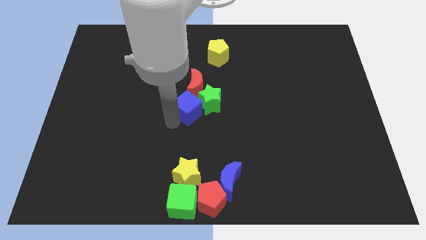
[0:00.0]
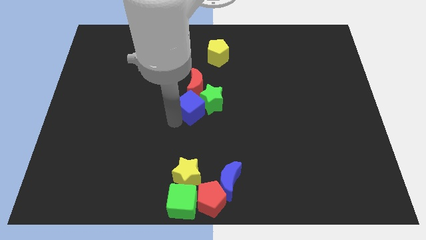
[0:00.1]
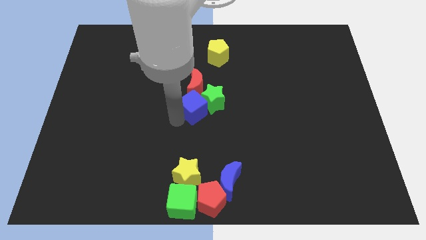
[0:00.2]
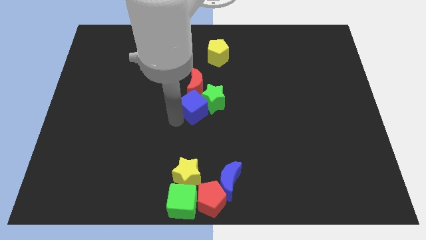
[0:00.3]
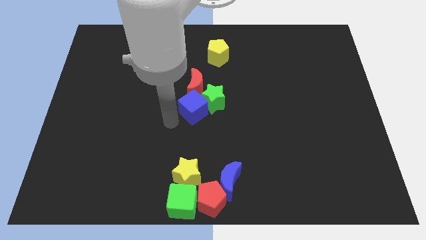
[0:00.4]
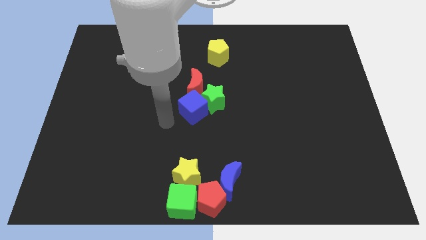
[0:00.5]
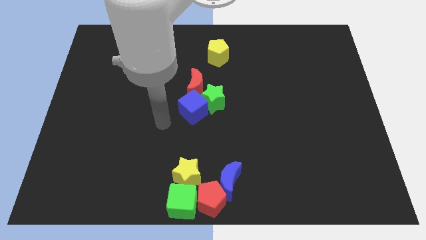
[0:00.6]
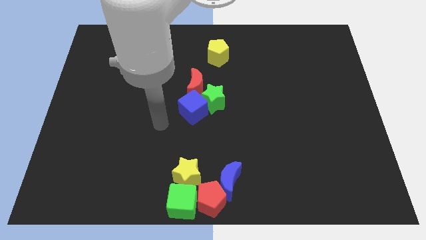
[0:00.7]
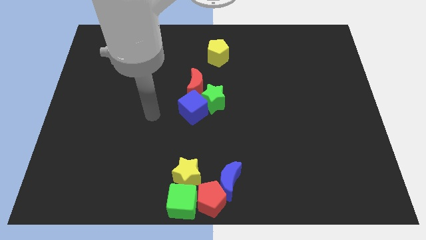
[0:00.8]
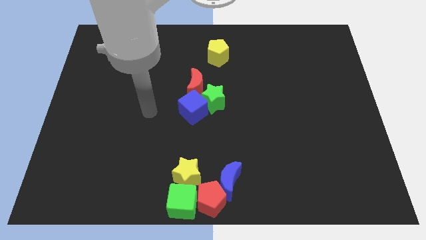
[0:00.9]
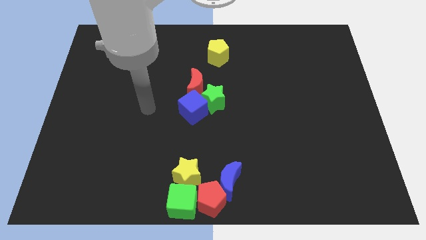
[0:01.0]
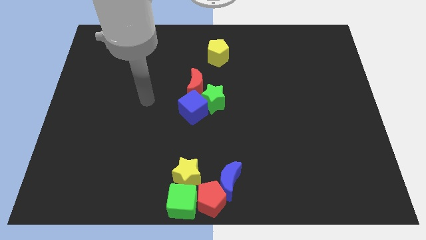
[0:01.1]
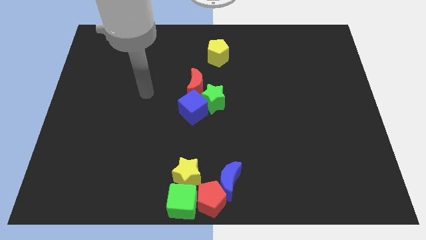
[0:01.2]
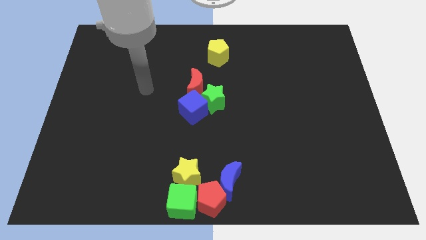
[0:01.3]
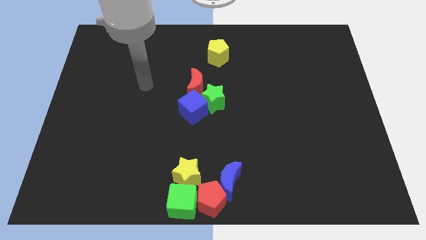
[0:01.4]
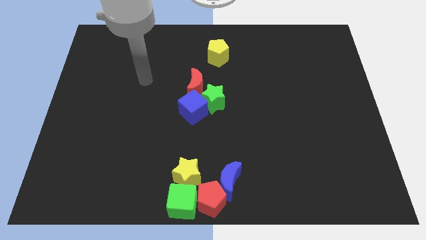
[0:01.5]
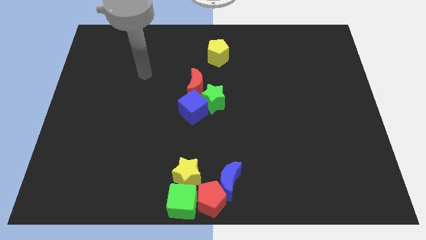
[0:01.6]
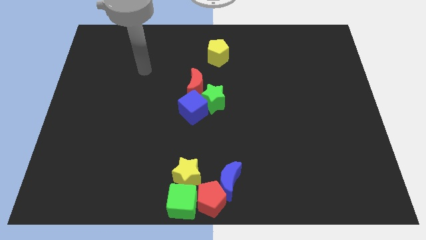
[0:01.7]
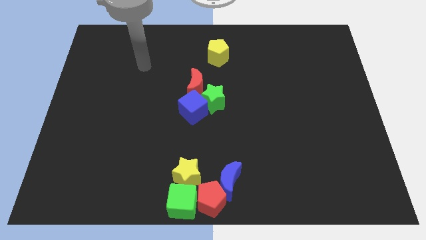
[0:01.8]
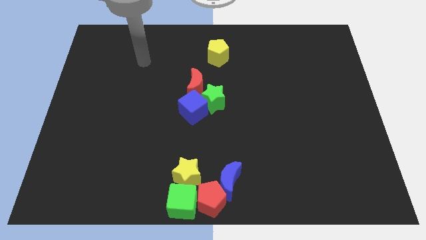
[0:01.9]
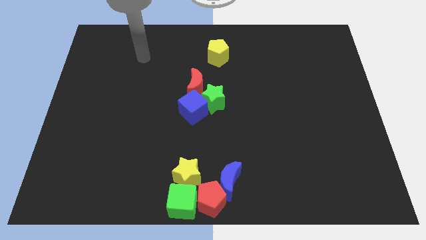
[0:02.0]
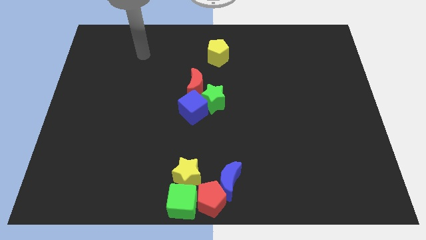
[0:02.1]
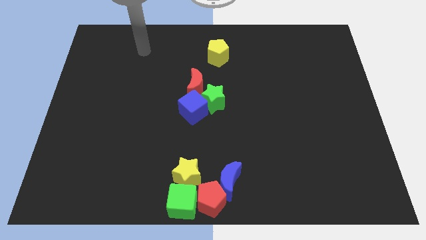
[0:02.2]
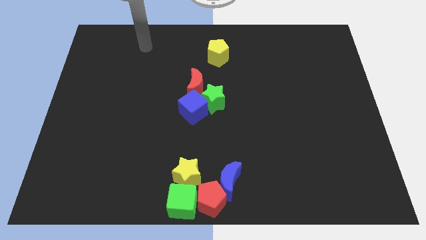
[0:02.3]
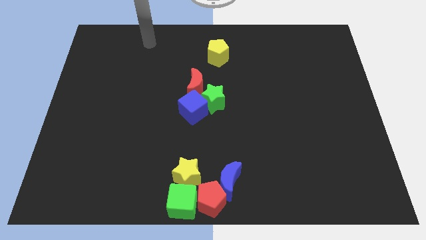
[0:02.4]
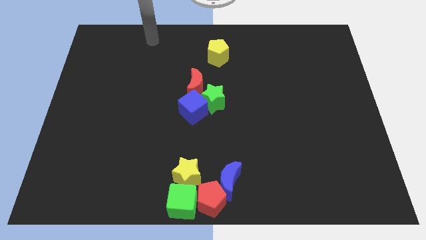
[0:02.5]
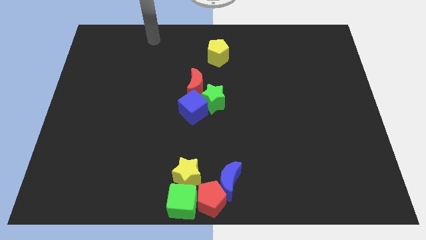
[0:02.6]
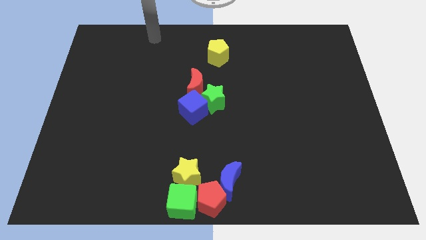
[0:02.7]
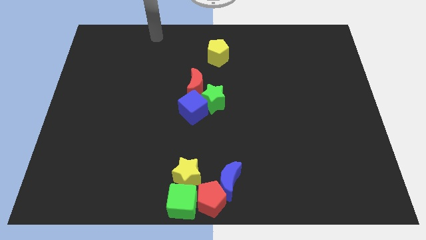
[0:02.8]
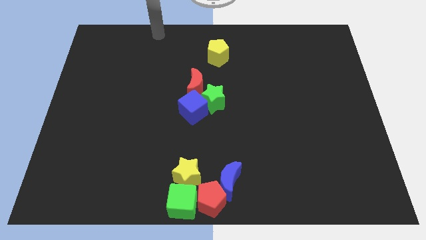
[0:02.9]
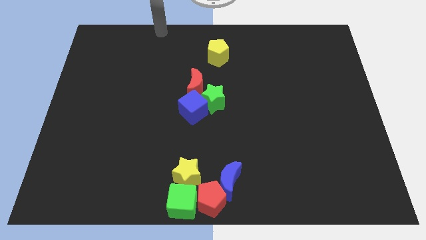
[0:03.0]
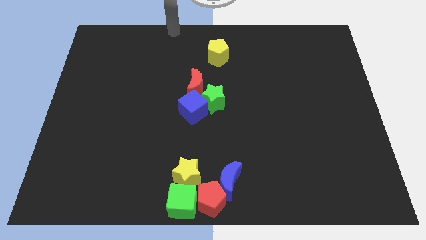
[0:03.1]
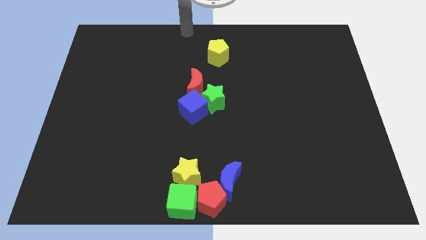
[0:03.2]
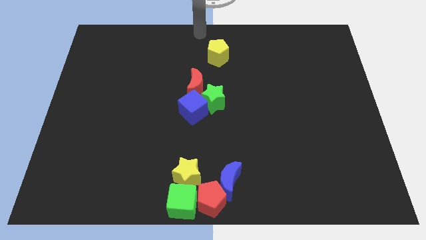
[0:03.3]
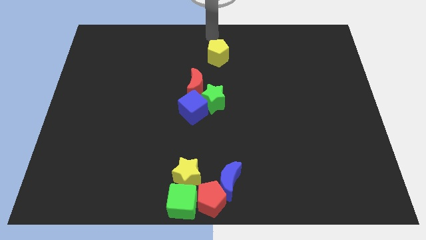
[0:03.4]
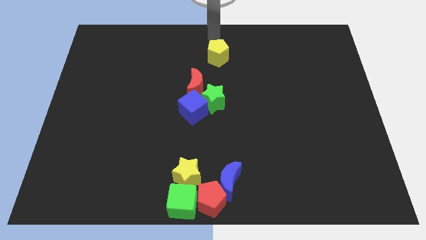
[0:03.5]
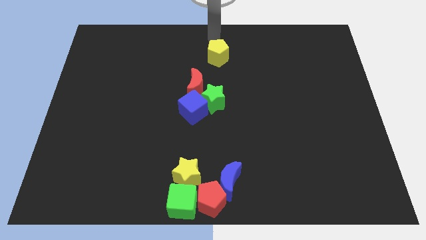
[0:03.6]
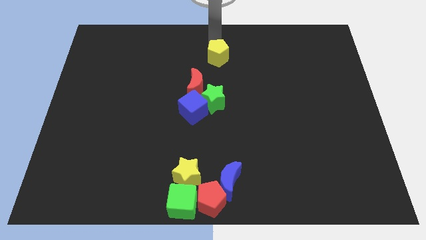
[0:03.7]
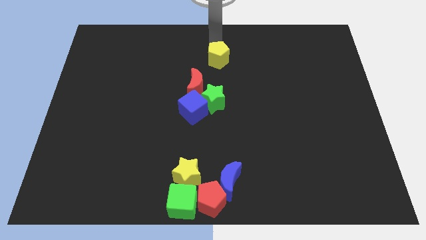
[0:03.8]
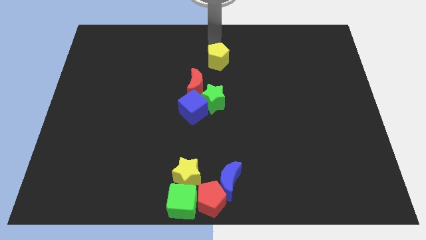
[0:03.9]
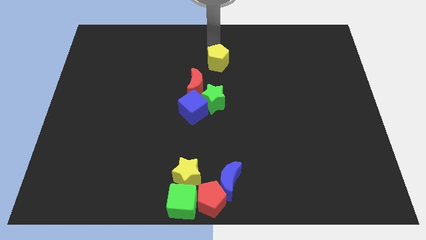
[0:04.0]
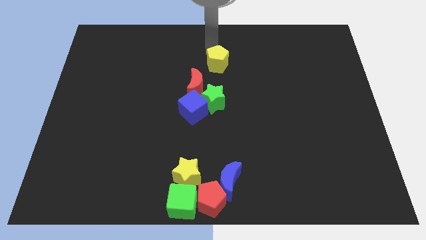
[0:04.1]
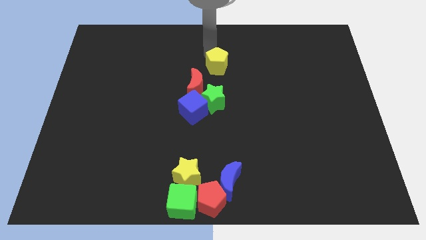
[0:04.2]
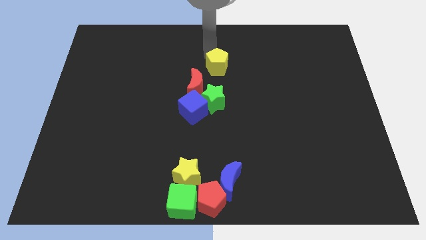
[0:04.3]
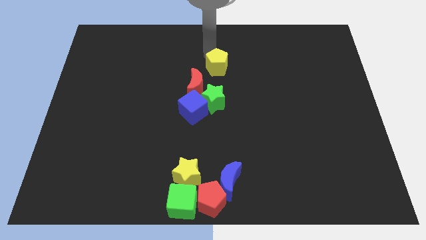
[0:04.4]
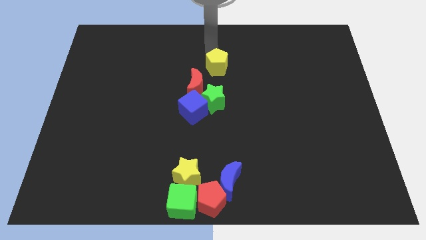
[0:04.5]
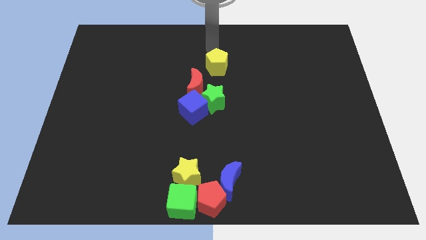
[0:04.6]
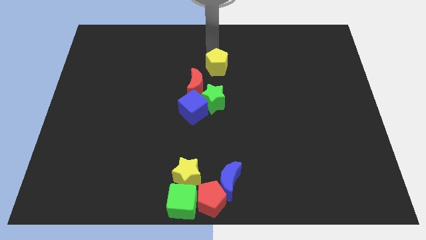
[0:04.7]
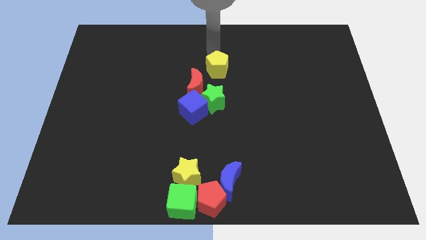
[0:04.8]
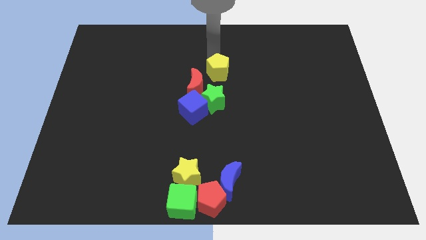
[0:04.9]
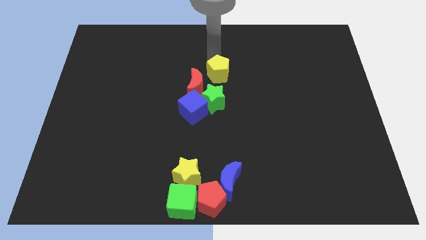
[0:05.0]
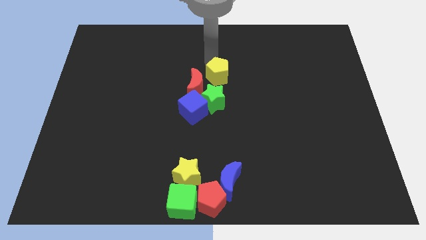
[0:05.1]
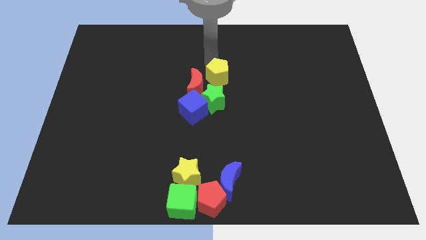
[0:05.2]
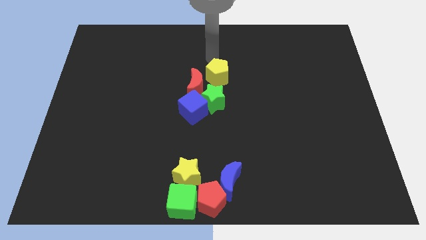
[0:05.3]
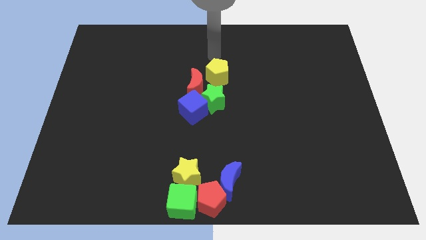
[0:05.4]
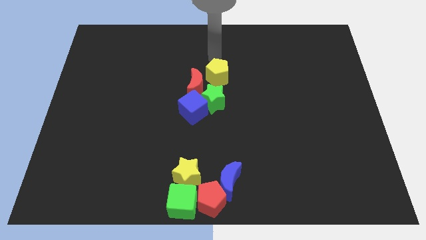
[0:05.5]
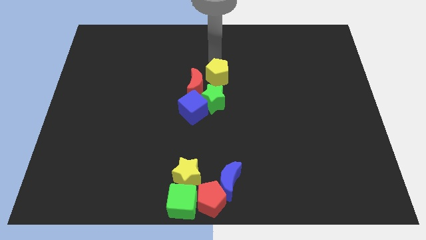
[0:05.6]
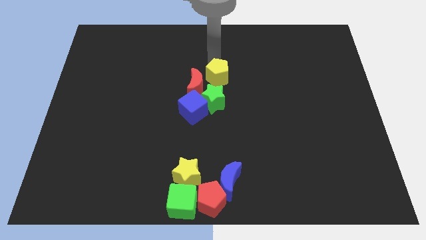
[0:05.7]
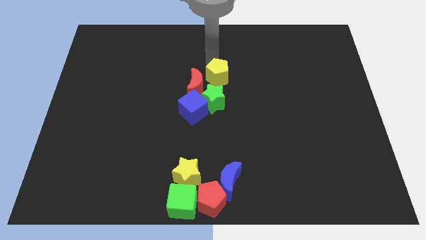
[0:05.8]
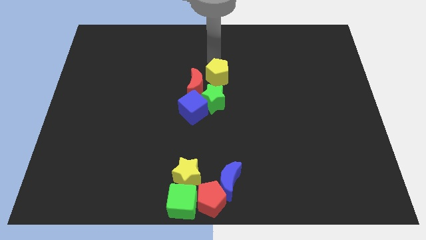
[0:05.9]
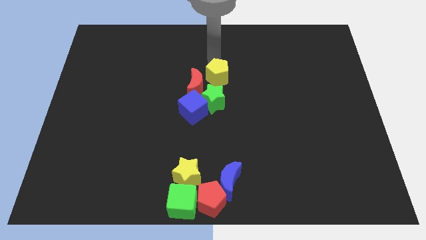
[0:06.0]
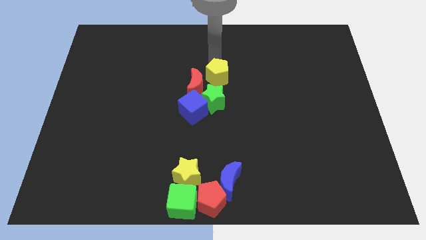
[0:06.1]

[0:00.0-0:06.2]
make a group of blocks

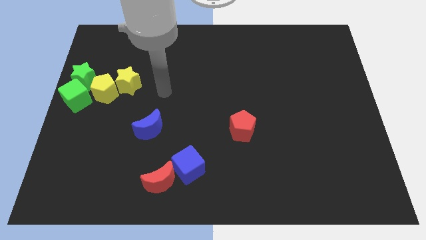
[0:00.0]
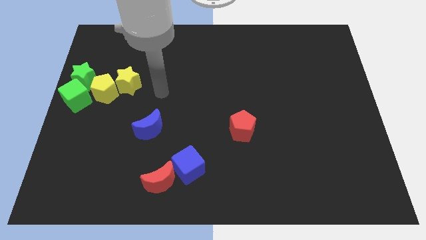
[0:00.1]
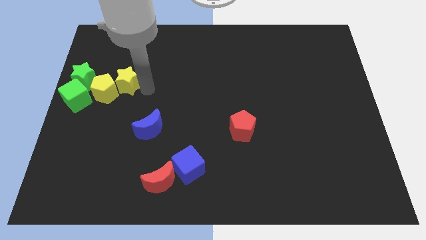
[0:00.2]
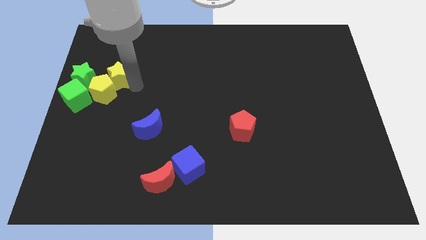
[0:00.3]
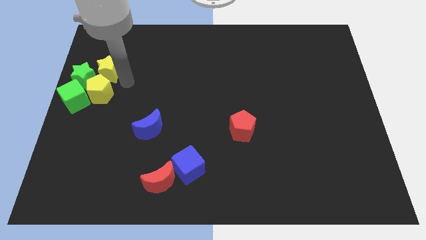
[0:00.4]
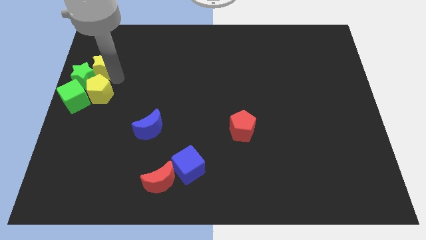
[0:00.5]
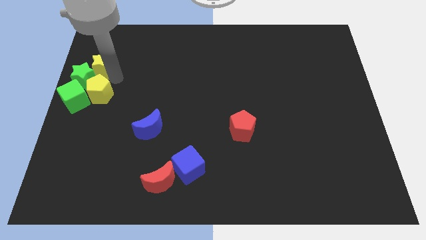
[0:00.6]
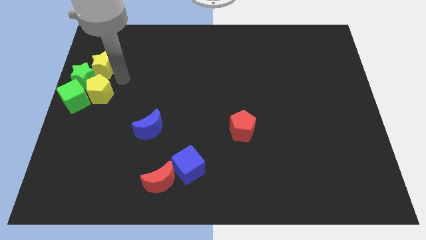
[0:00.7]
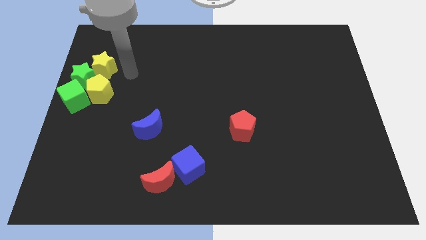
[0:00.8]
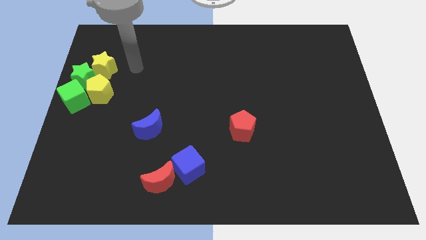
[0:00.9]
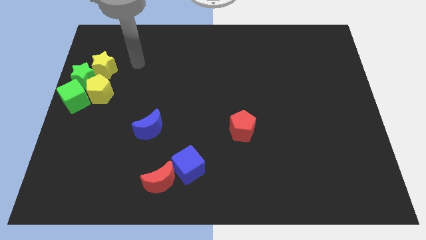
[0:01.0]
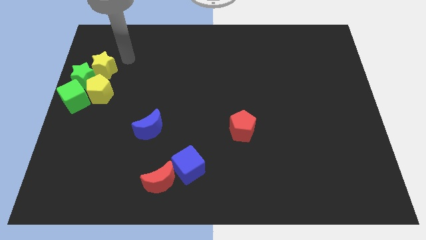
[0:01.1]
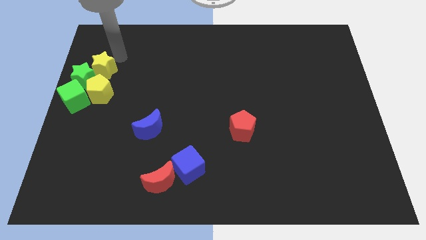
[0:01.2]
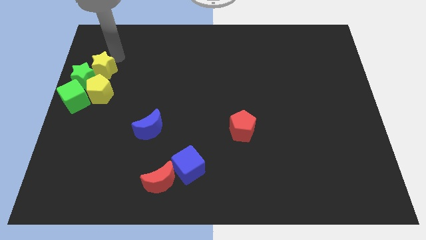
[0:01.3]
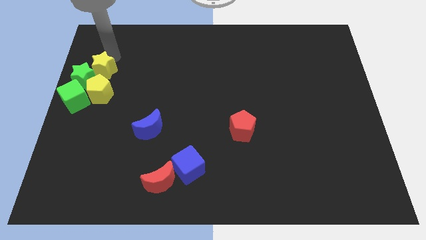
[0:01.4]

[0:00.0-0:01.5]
move the yellow star vertically above the yellow pentagon

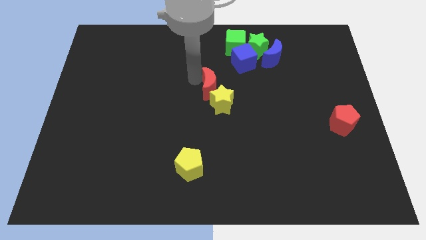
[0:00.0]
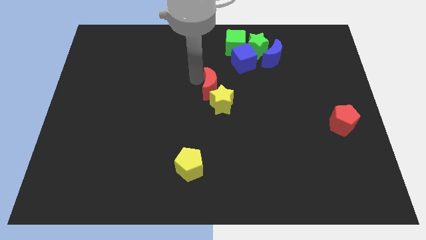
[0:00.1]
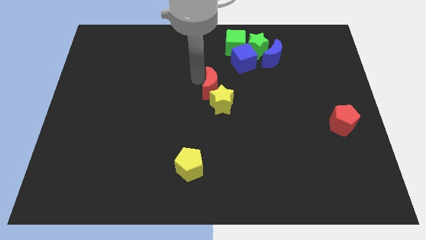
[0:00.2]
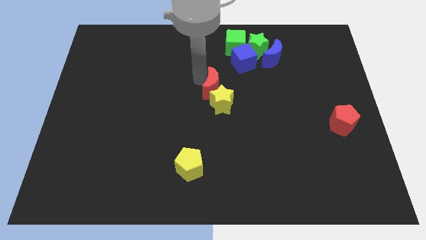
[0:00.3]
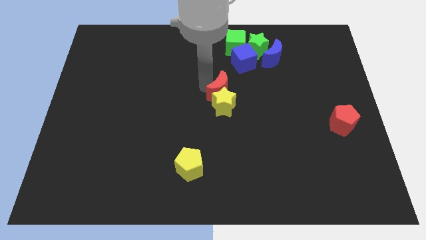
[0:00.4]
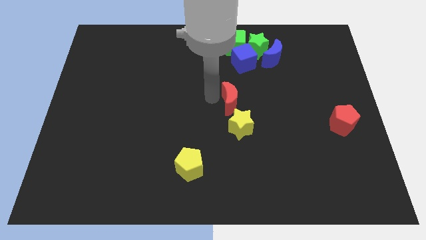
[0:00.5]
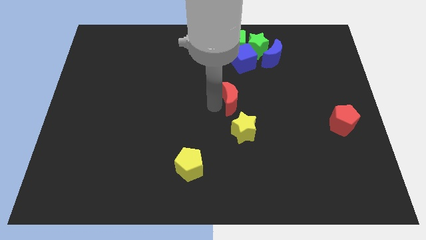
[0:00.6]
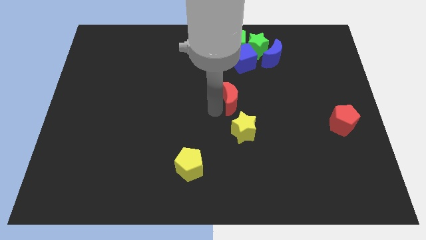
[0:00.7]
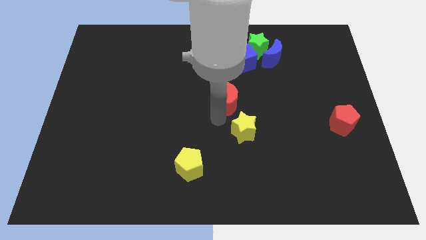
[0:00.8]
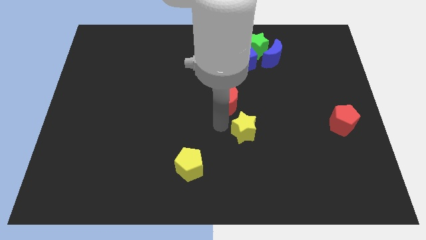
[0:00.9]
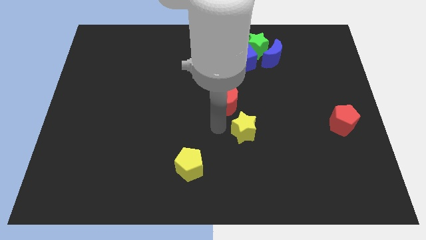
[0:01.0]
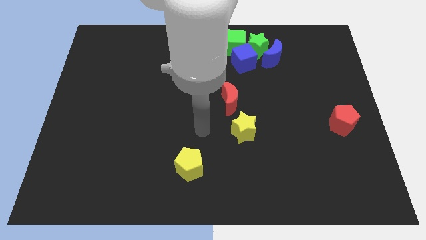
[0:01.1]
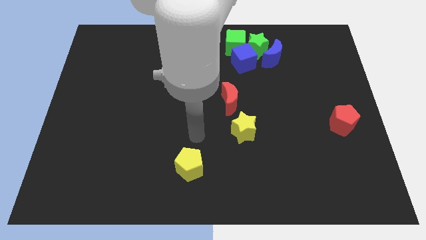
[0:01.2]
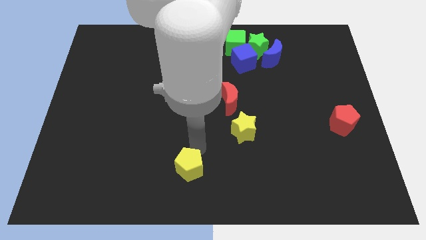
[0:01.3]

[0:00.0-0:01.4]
push the yellow star with the red moon
